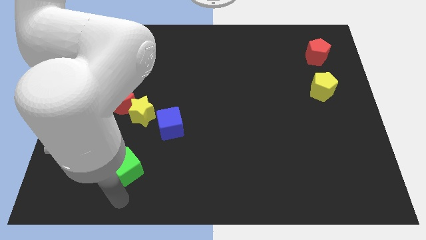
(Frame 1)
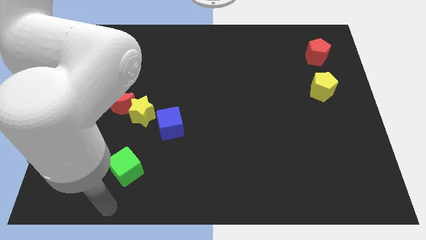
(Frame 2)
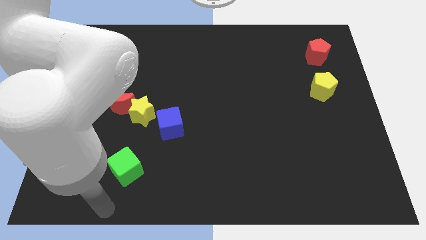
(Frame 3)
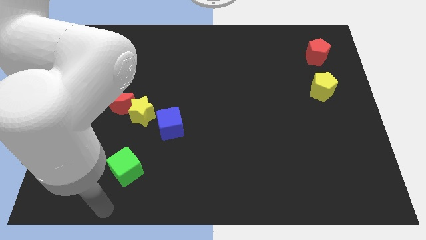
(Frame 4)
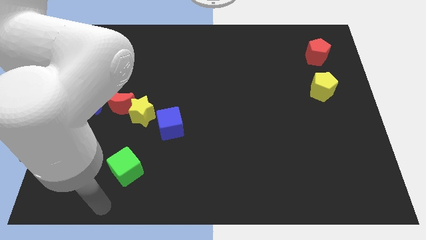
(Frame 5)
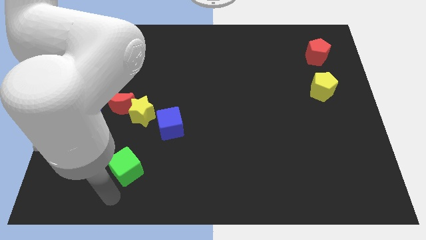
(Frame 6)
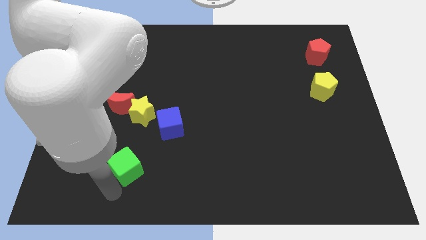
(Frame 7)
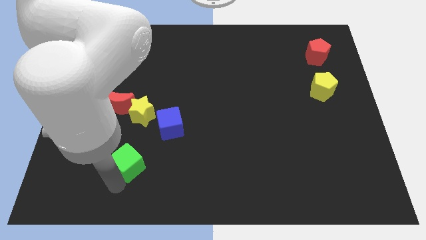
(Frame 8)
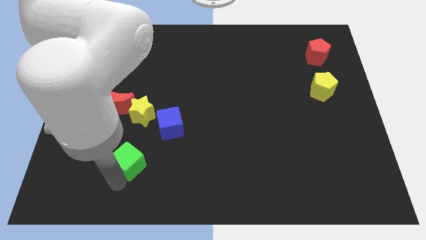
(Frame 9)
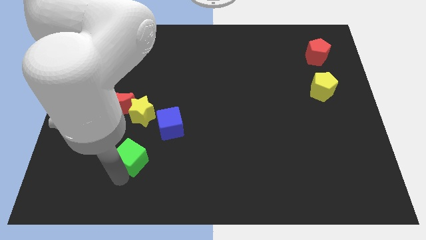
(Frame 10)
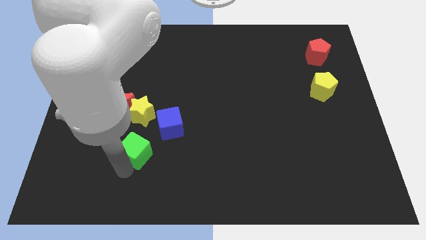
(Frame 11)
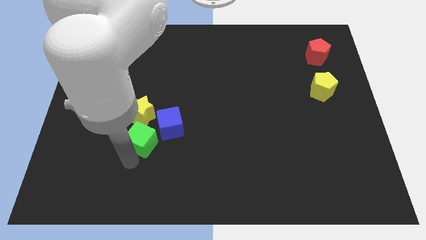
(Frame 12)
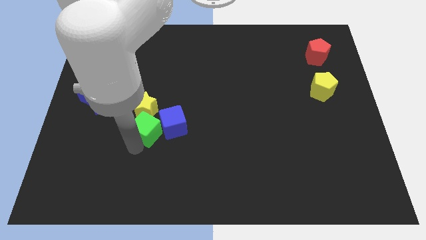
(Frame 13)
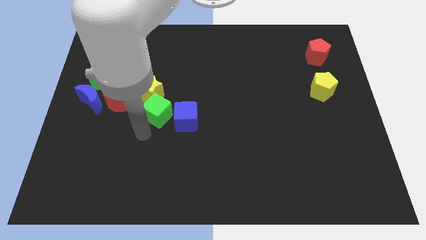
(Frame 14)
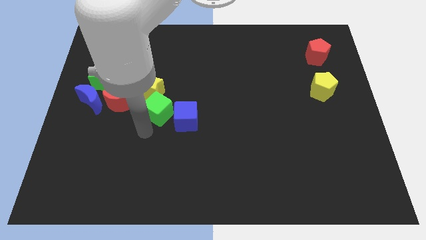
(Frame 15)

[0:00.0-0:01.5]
push the green cube into the yellow star and blue cube

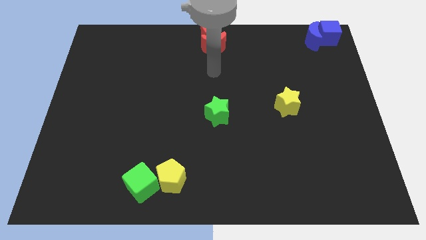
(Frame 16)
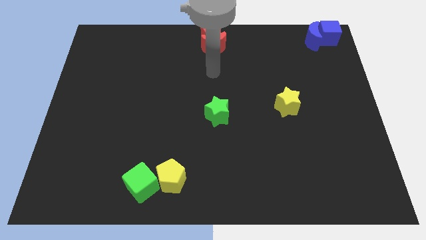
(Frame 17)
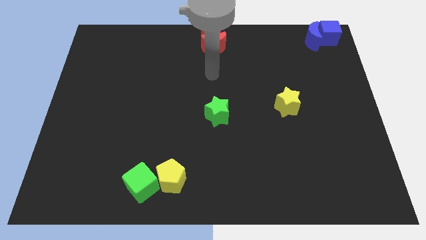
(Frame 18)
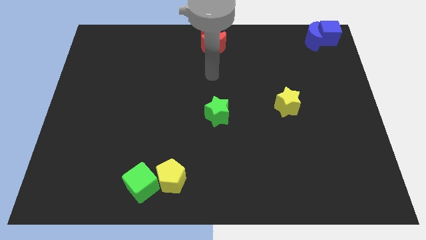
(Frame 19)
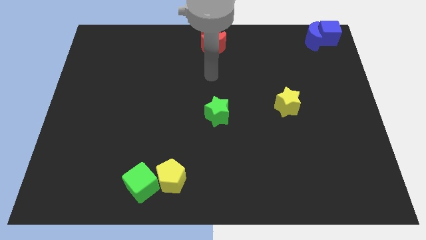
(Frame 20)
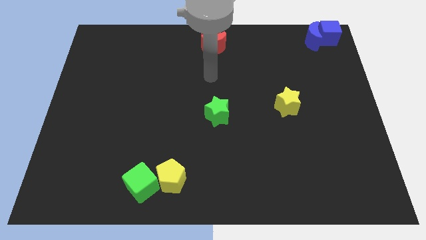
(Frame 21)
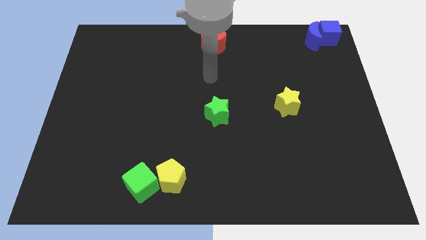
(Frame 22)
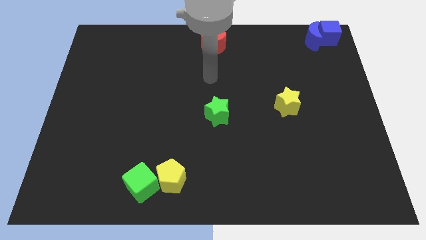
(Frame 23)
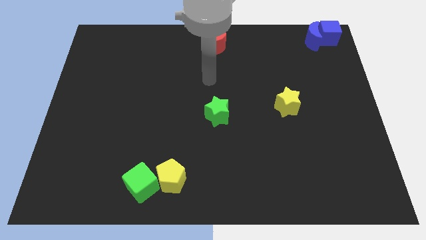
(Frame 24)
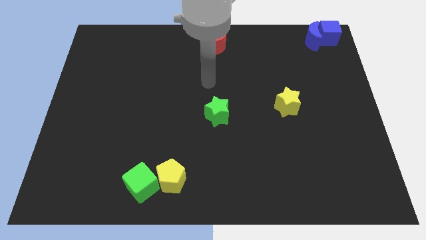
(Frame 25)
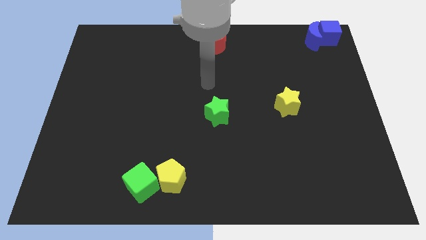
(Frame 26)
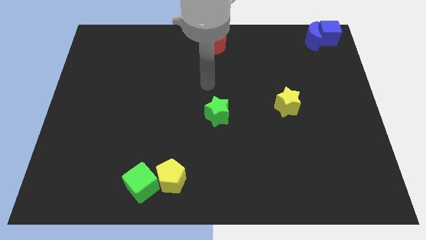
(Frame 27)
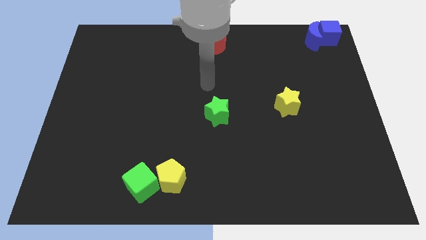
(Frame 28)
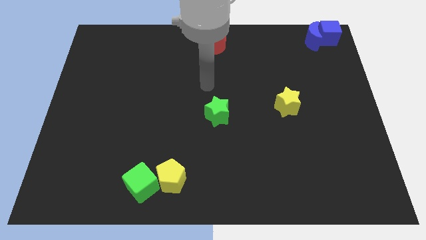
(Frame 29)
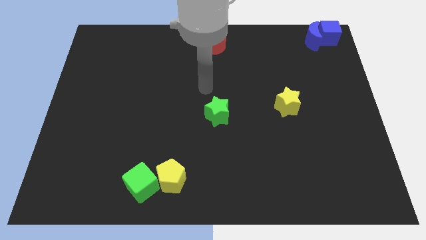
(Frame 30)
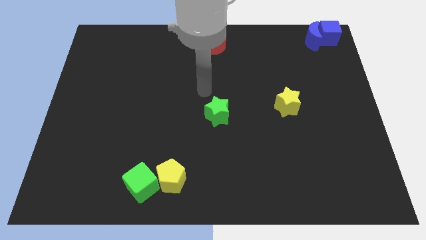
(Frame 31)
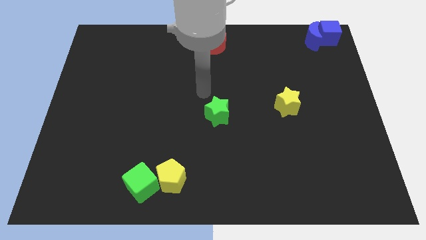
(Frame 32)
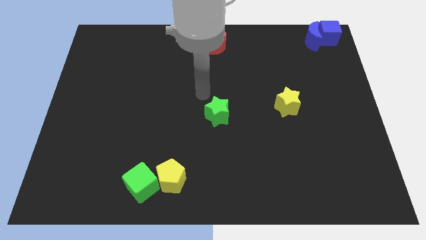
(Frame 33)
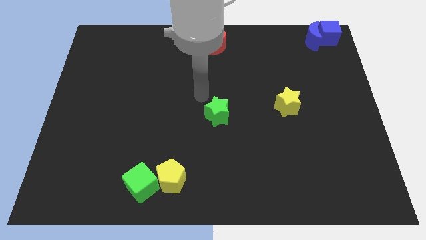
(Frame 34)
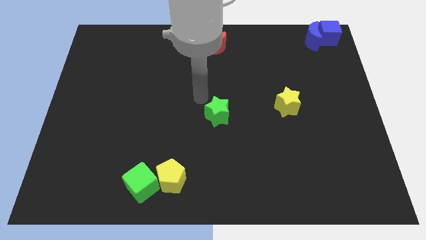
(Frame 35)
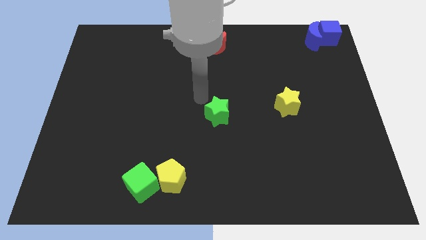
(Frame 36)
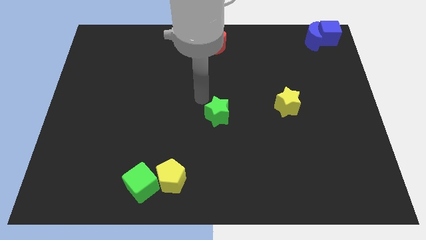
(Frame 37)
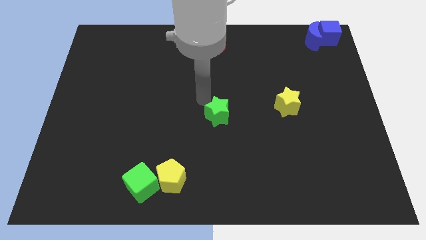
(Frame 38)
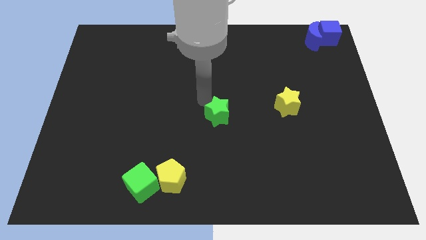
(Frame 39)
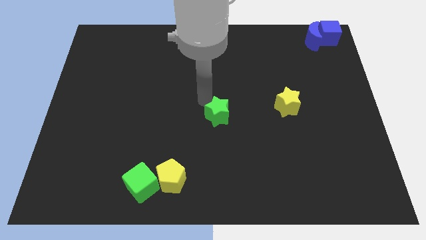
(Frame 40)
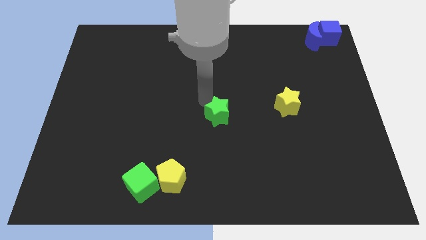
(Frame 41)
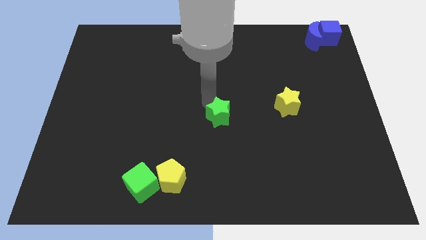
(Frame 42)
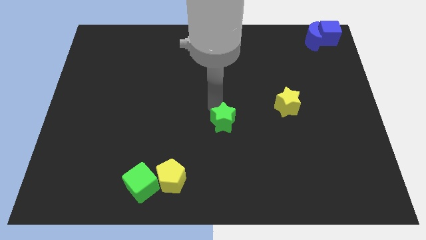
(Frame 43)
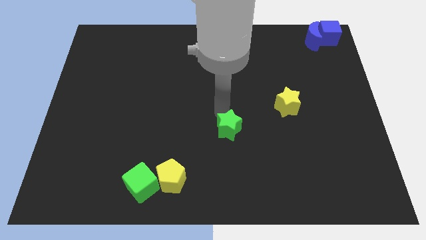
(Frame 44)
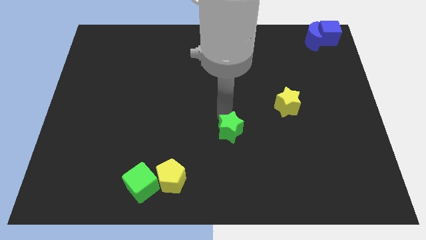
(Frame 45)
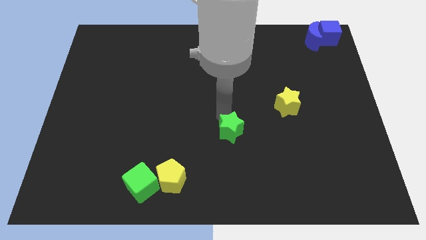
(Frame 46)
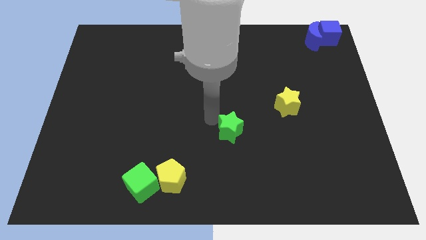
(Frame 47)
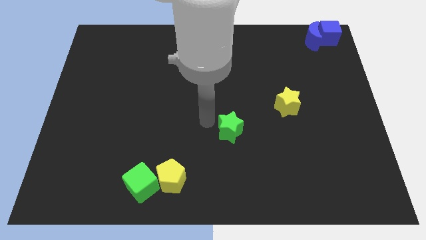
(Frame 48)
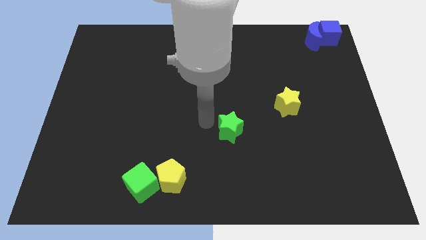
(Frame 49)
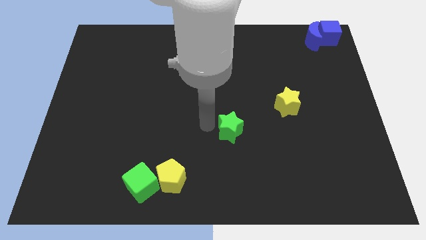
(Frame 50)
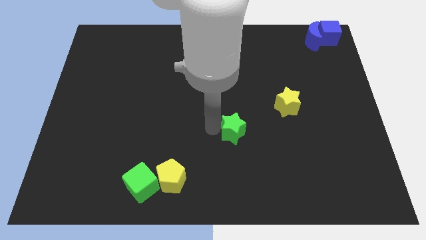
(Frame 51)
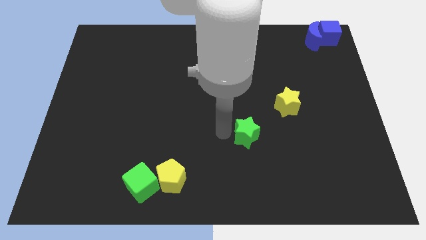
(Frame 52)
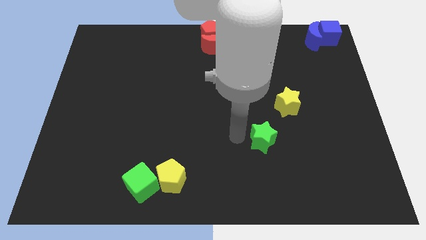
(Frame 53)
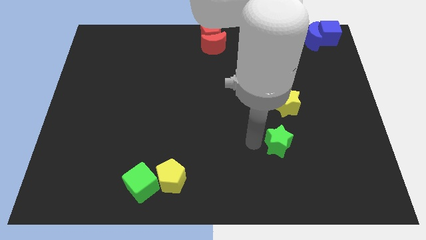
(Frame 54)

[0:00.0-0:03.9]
push the green star diagonally to the yellow star

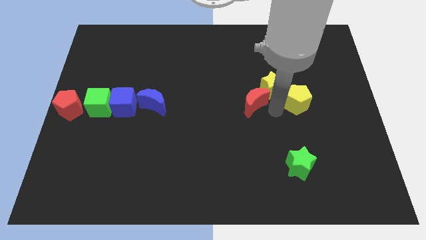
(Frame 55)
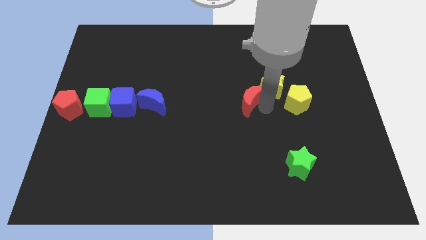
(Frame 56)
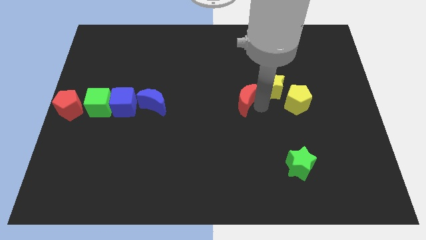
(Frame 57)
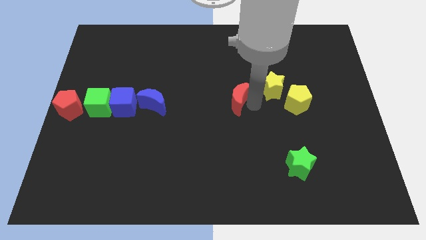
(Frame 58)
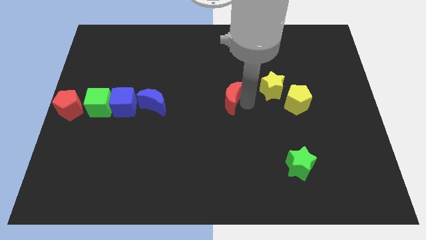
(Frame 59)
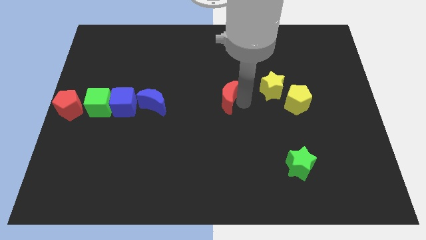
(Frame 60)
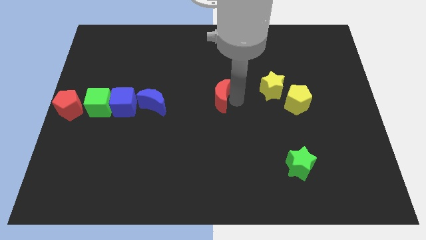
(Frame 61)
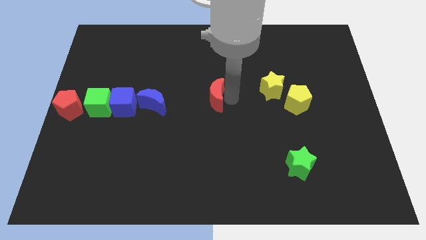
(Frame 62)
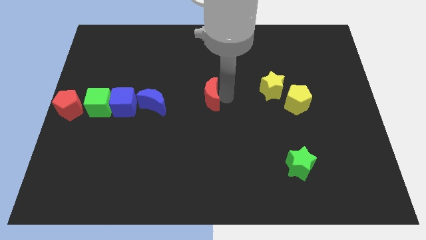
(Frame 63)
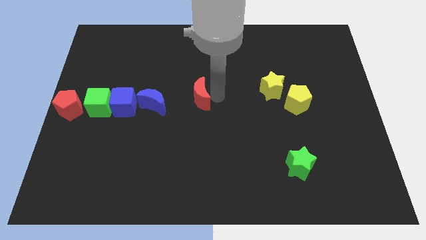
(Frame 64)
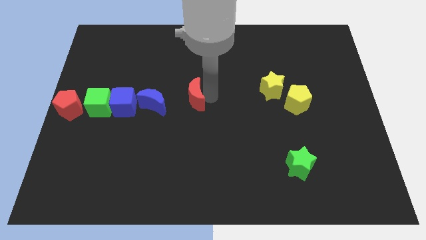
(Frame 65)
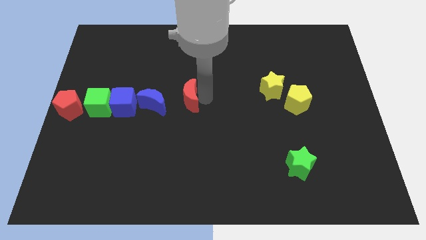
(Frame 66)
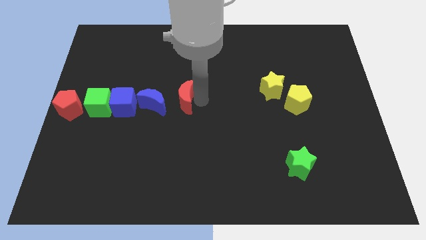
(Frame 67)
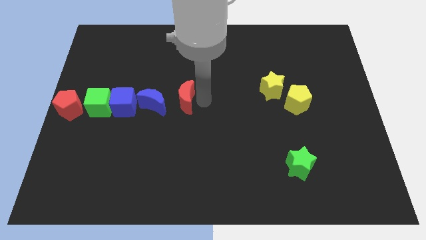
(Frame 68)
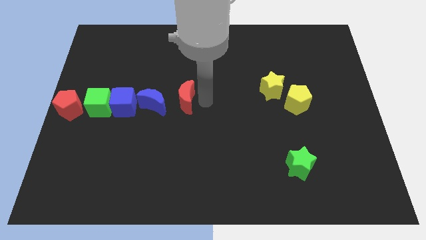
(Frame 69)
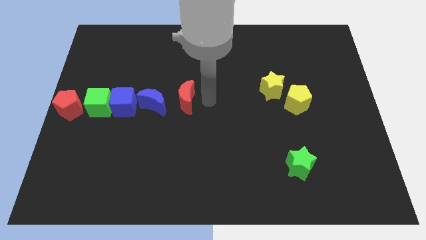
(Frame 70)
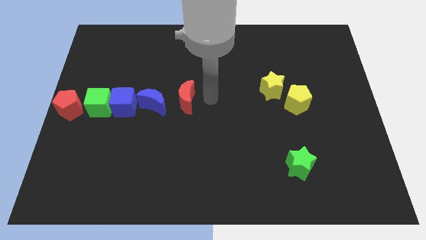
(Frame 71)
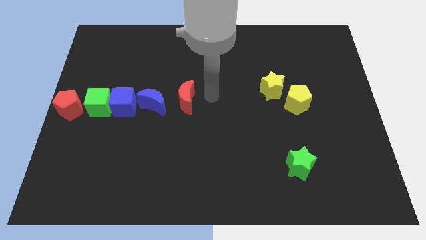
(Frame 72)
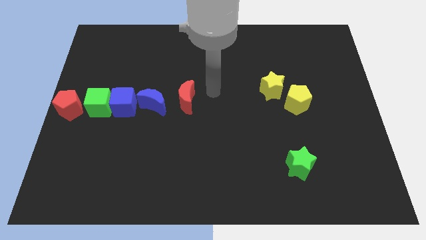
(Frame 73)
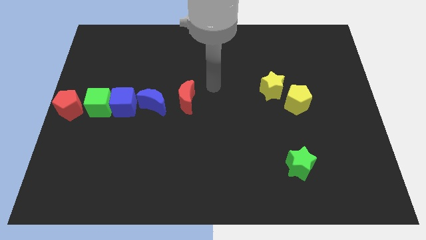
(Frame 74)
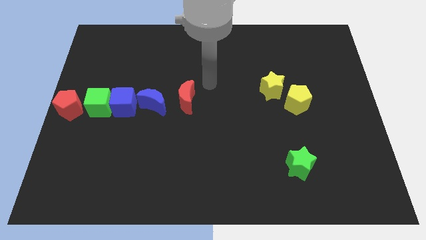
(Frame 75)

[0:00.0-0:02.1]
separate red moon from yellow blocks

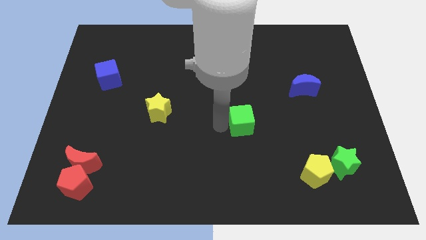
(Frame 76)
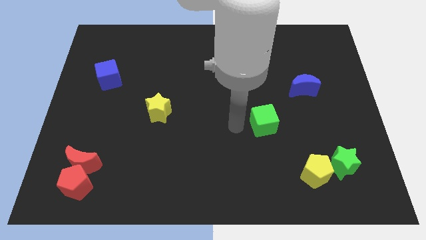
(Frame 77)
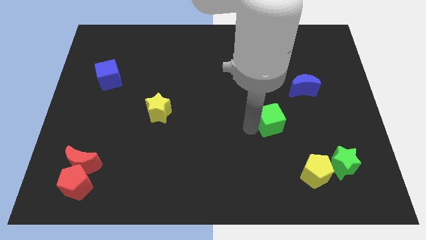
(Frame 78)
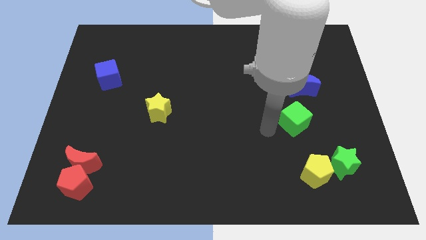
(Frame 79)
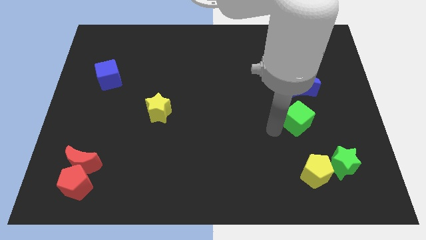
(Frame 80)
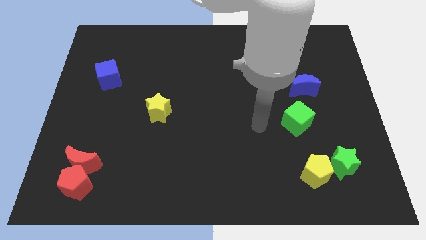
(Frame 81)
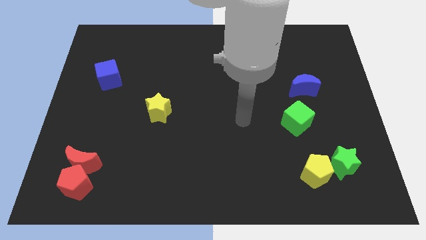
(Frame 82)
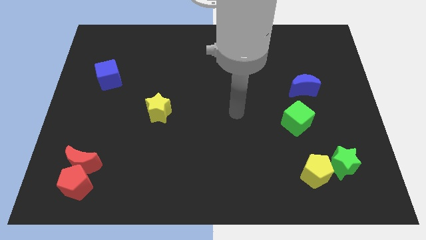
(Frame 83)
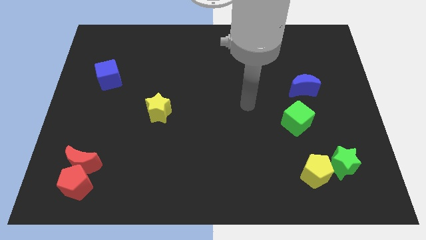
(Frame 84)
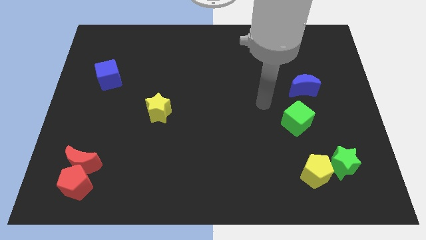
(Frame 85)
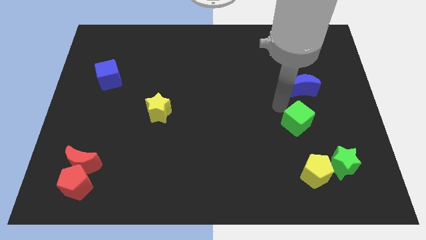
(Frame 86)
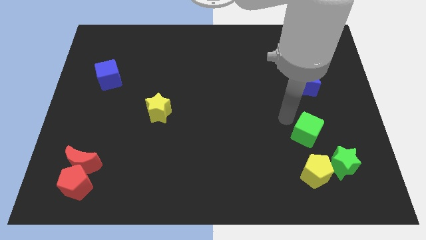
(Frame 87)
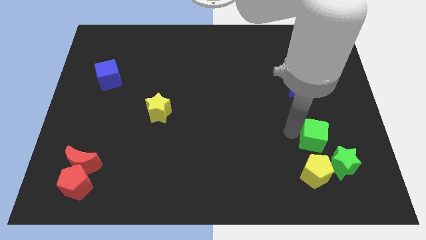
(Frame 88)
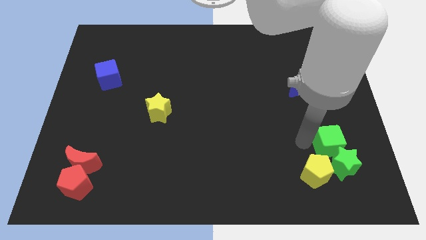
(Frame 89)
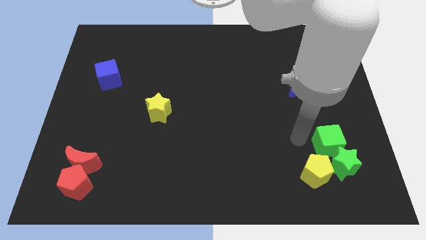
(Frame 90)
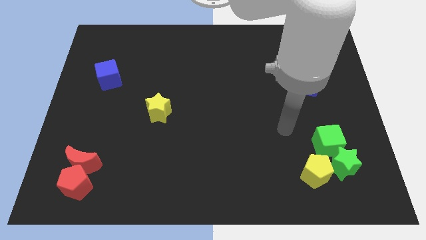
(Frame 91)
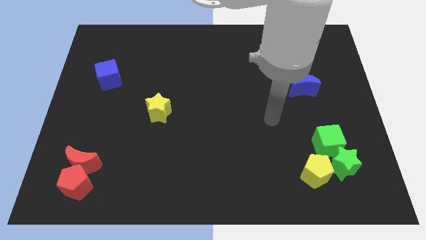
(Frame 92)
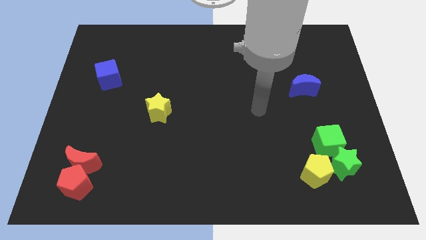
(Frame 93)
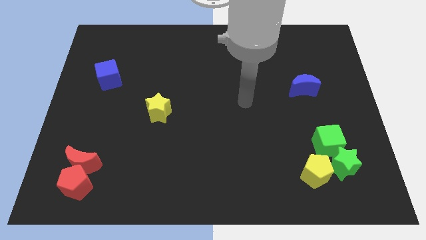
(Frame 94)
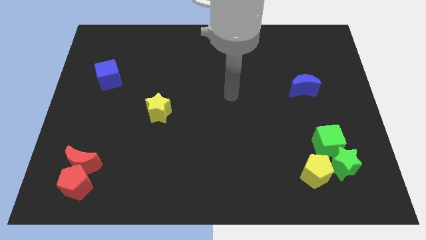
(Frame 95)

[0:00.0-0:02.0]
move the green cube to the top of the green star
